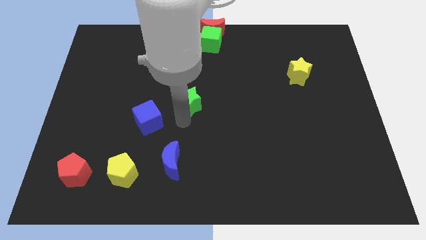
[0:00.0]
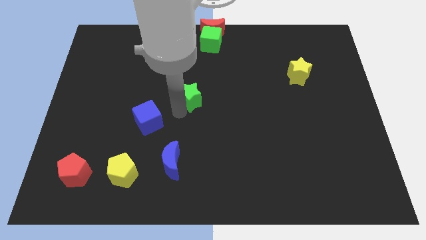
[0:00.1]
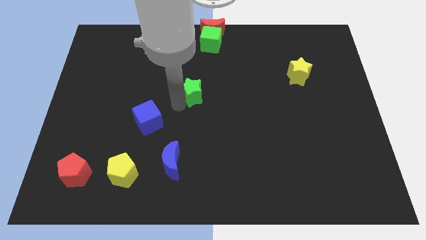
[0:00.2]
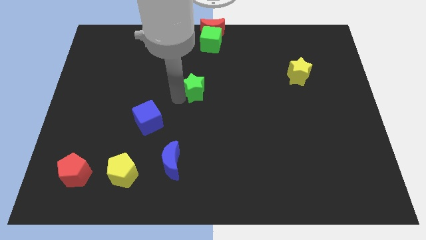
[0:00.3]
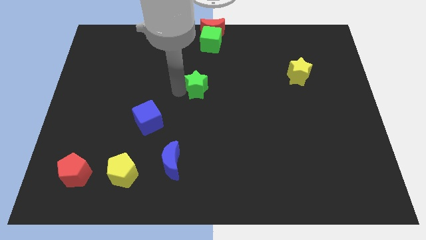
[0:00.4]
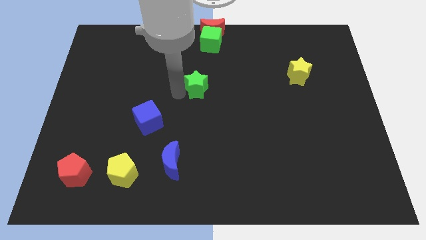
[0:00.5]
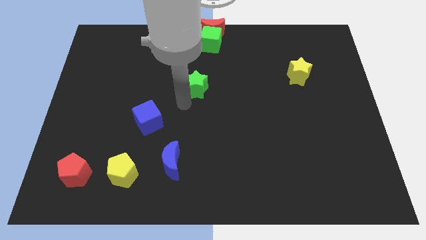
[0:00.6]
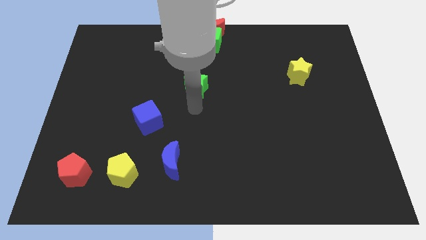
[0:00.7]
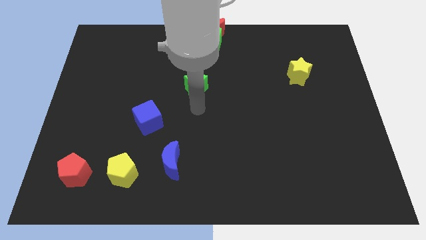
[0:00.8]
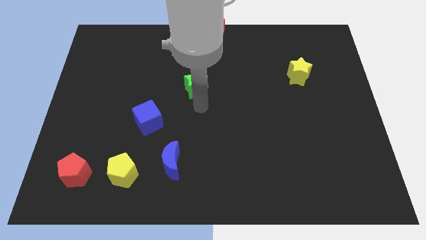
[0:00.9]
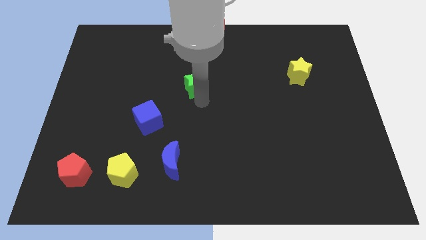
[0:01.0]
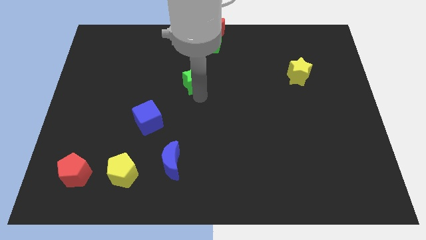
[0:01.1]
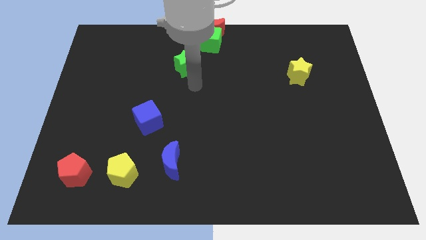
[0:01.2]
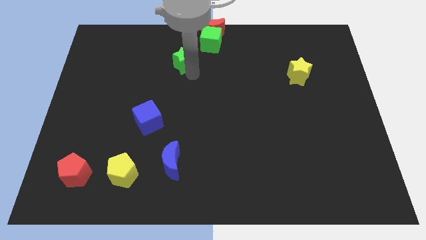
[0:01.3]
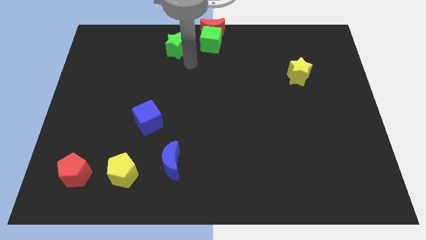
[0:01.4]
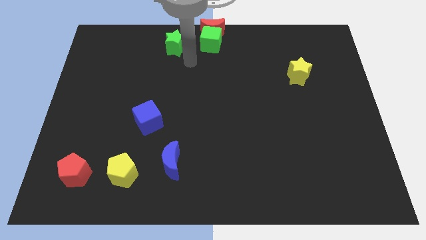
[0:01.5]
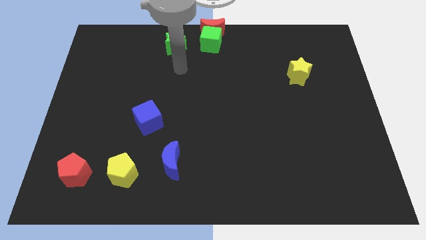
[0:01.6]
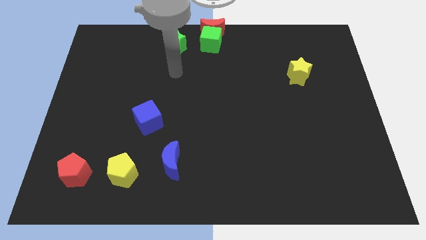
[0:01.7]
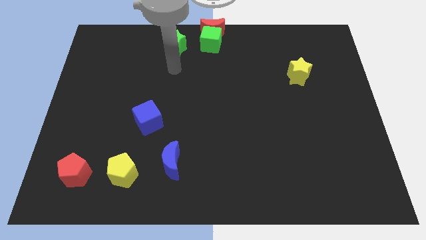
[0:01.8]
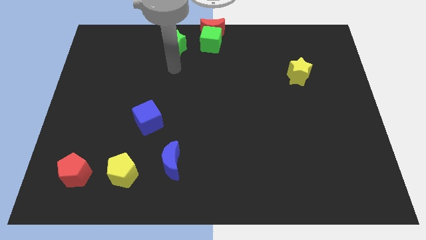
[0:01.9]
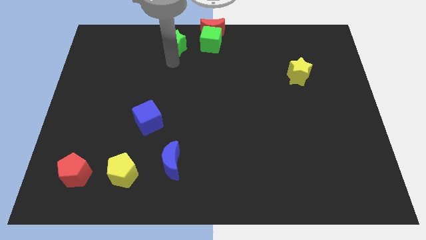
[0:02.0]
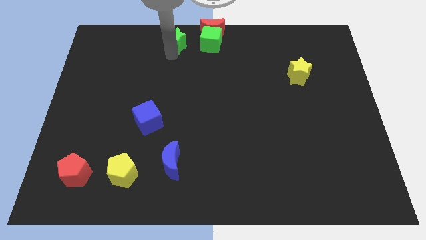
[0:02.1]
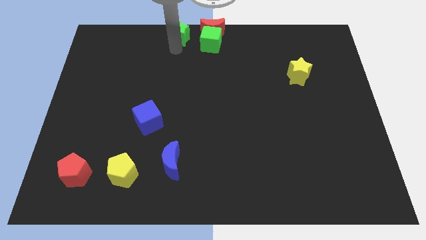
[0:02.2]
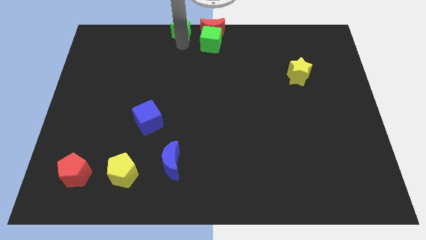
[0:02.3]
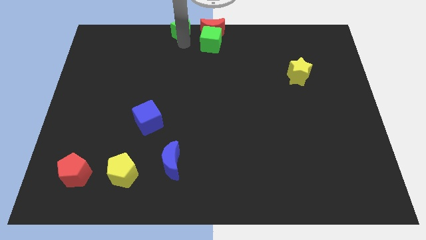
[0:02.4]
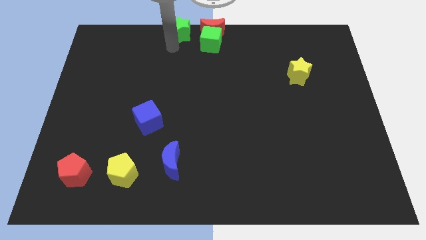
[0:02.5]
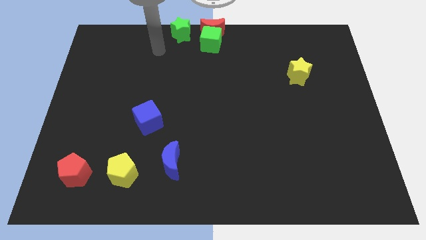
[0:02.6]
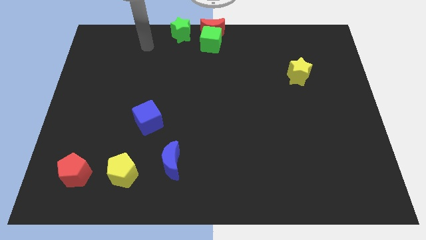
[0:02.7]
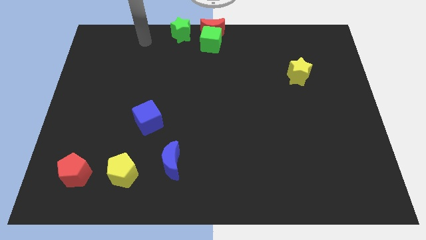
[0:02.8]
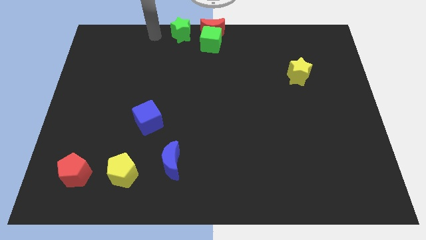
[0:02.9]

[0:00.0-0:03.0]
place green star to the left of red moon

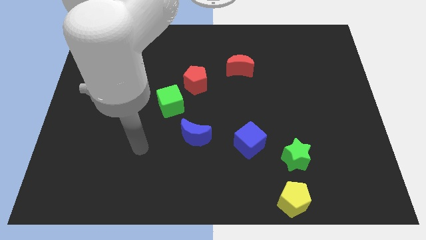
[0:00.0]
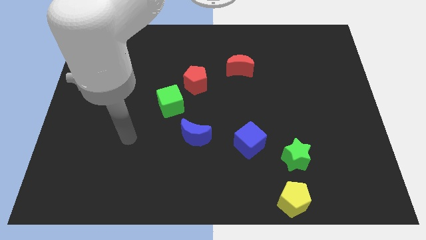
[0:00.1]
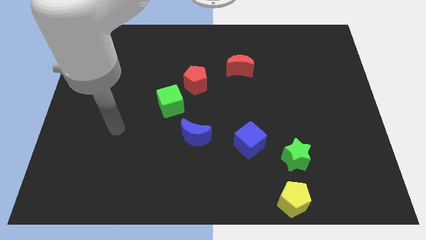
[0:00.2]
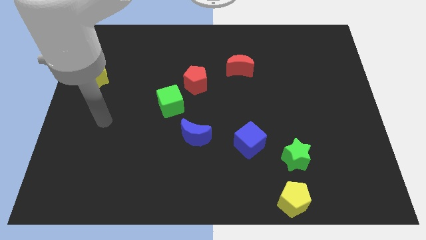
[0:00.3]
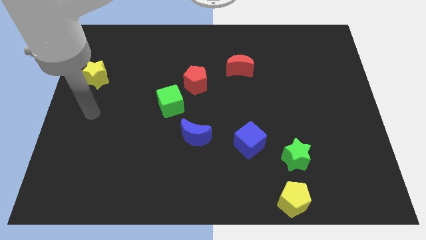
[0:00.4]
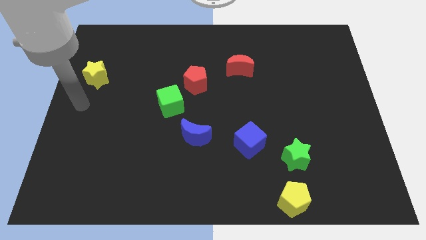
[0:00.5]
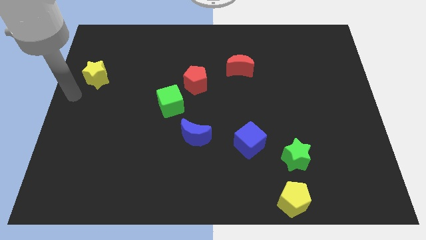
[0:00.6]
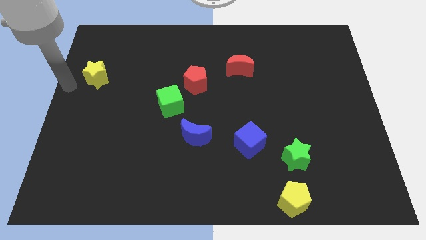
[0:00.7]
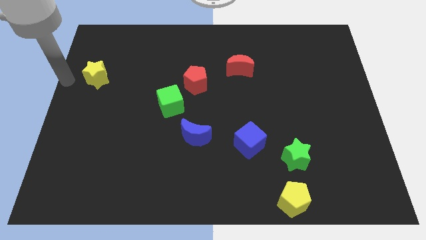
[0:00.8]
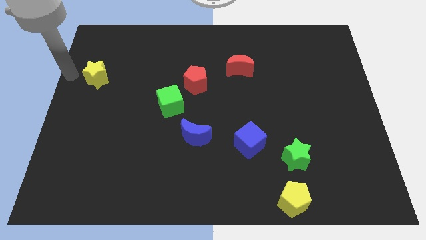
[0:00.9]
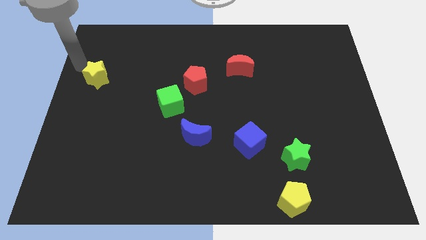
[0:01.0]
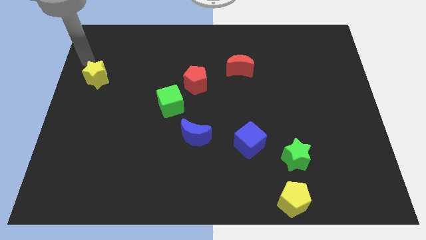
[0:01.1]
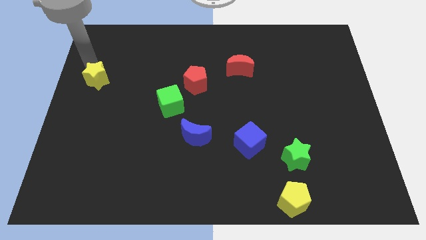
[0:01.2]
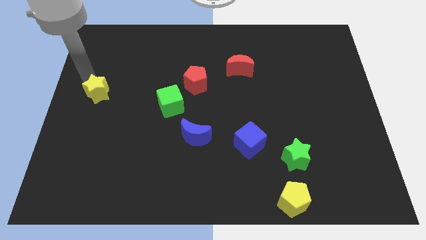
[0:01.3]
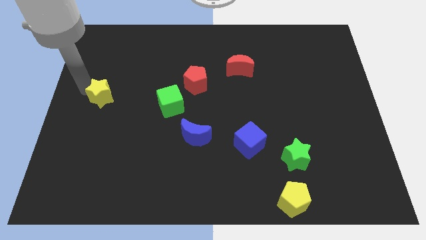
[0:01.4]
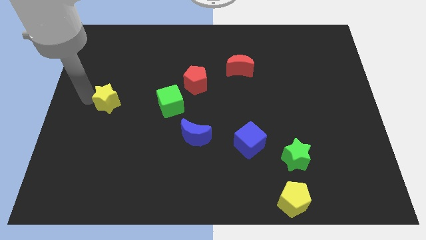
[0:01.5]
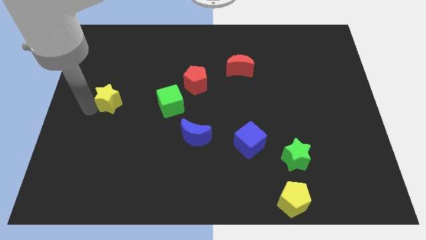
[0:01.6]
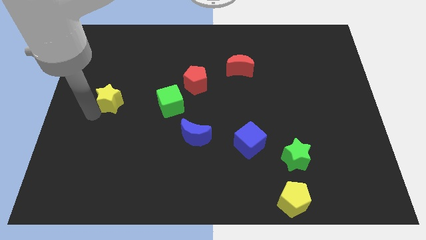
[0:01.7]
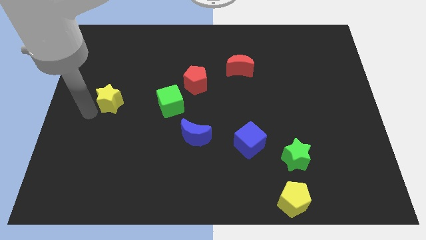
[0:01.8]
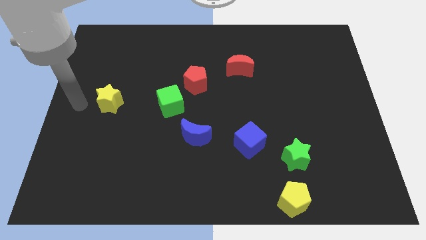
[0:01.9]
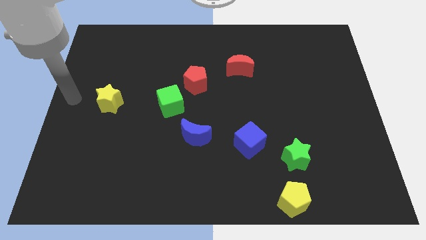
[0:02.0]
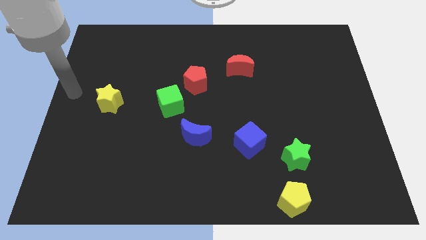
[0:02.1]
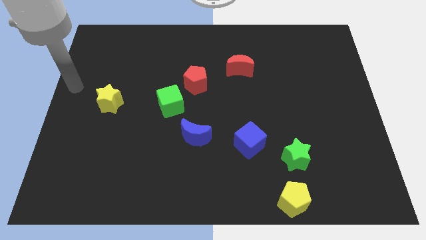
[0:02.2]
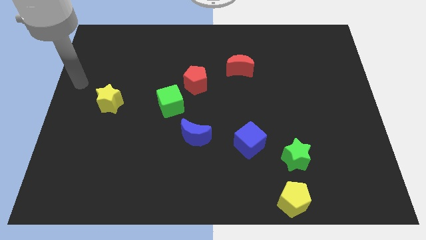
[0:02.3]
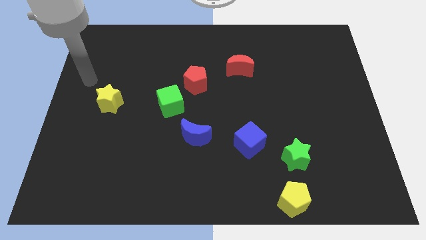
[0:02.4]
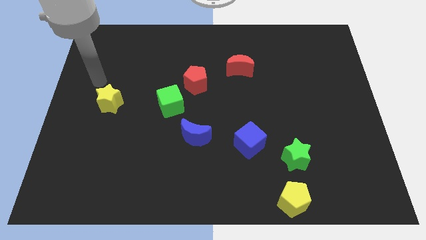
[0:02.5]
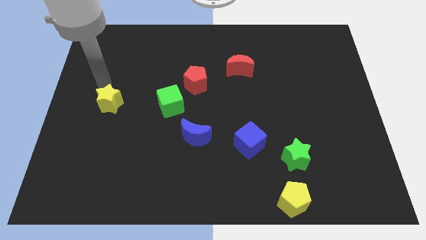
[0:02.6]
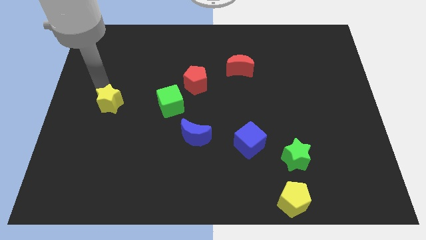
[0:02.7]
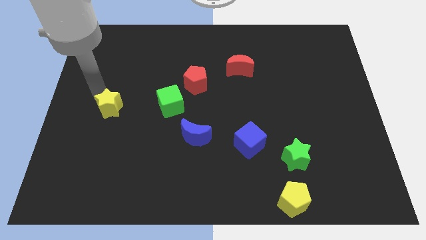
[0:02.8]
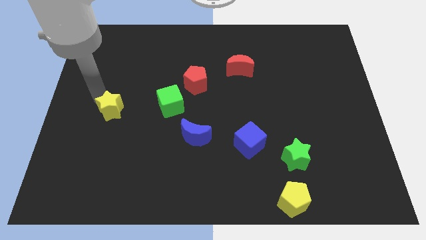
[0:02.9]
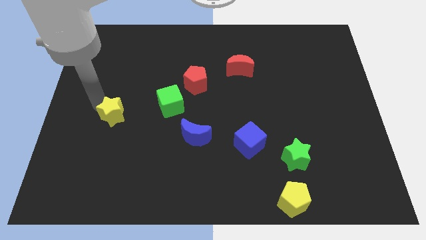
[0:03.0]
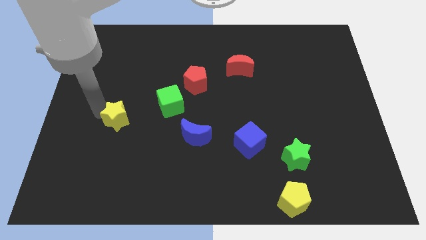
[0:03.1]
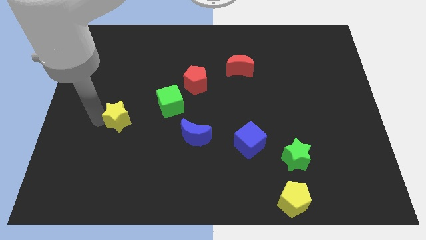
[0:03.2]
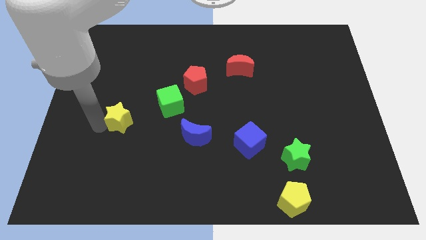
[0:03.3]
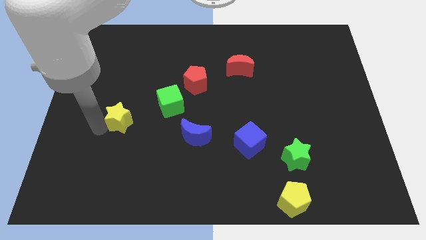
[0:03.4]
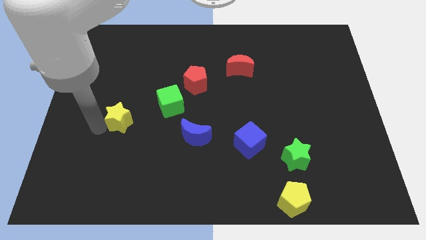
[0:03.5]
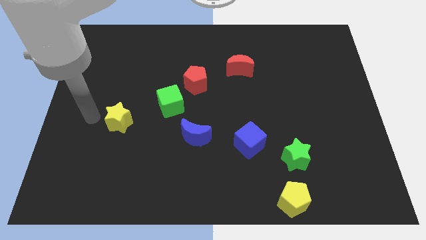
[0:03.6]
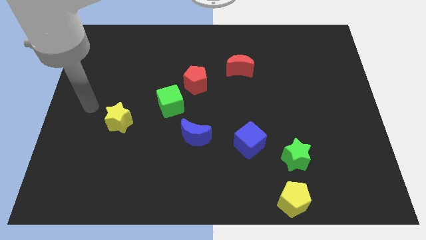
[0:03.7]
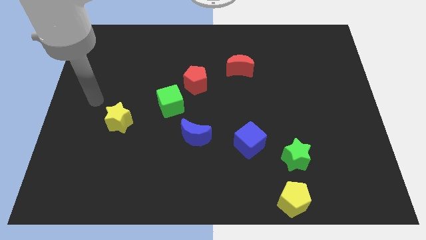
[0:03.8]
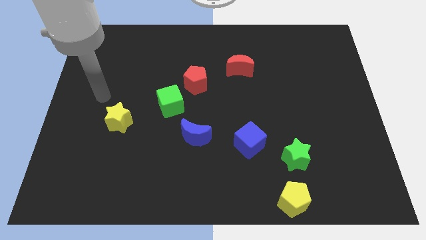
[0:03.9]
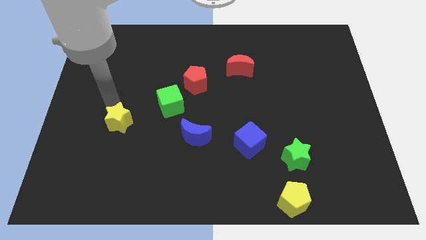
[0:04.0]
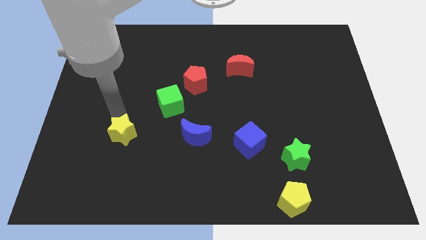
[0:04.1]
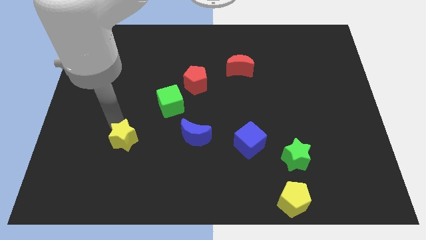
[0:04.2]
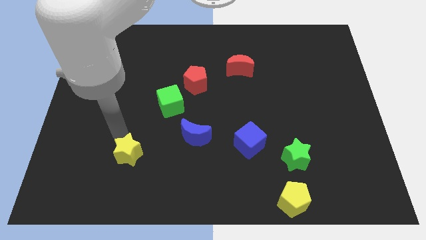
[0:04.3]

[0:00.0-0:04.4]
push the yellow star to the left of the blue crescent

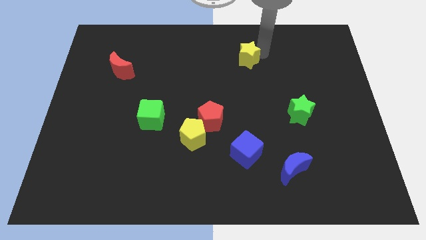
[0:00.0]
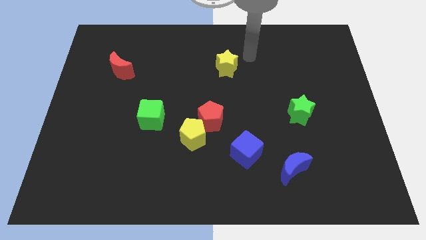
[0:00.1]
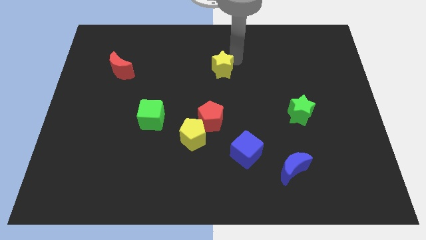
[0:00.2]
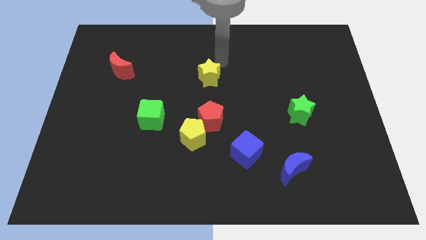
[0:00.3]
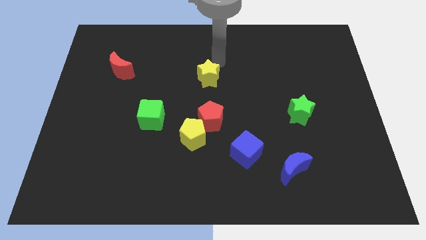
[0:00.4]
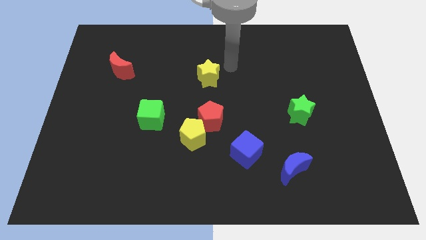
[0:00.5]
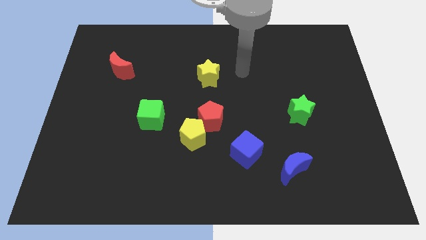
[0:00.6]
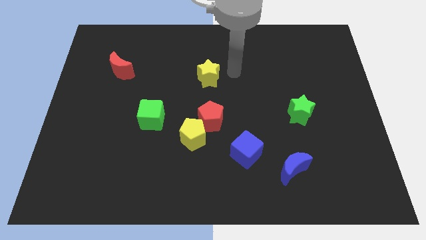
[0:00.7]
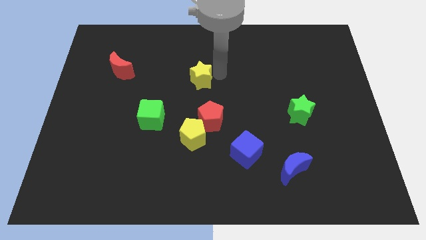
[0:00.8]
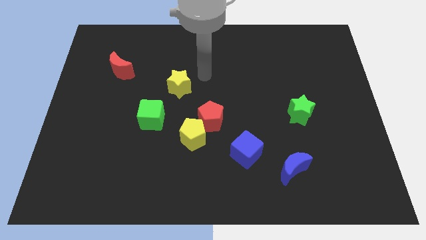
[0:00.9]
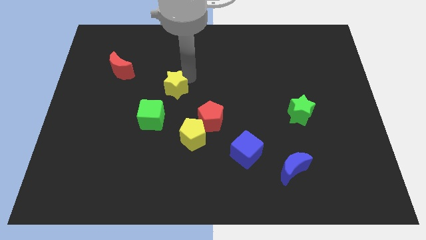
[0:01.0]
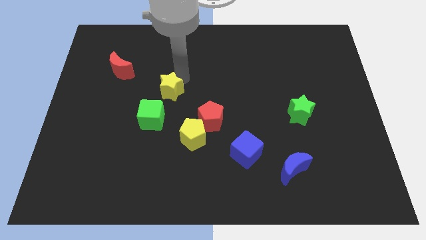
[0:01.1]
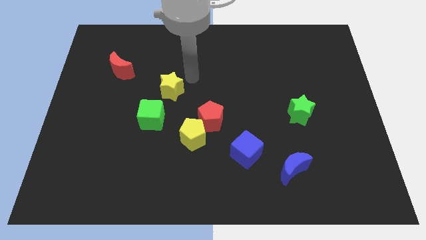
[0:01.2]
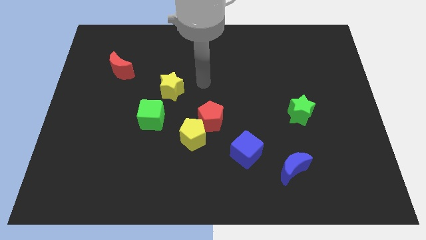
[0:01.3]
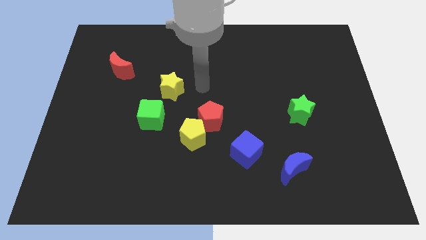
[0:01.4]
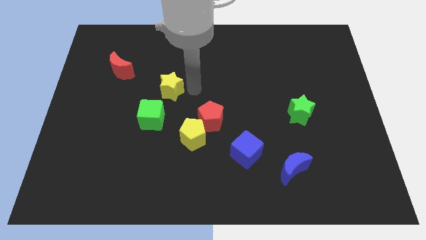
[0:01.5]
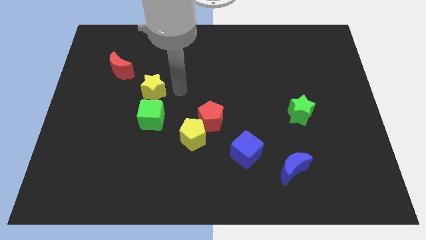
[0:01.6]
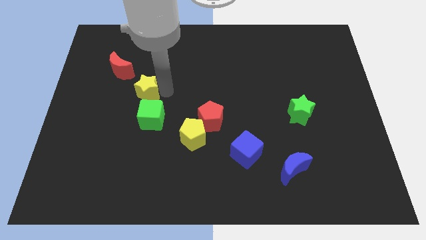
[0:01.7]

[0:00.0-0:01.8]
place the yellow star above the green cube
